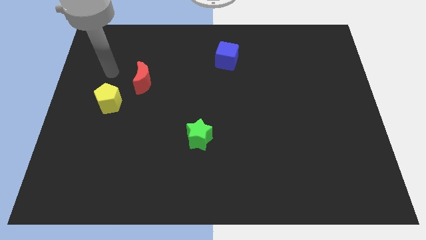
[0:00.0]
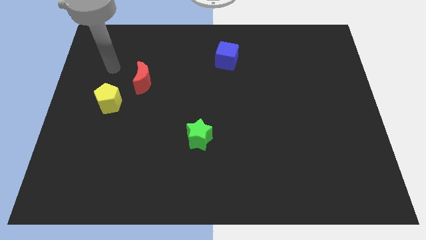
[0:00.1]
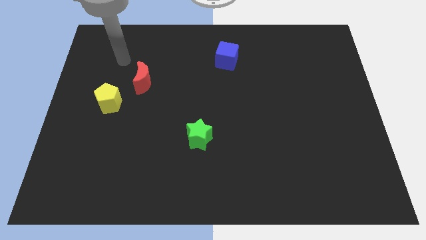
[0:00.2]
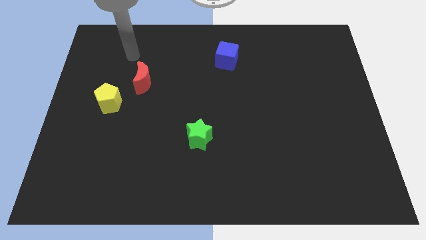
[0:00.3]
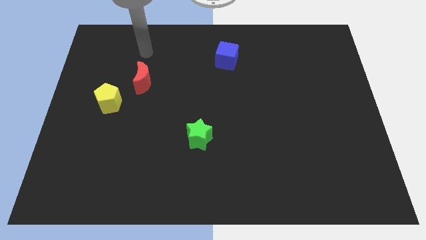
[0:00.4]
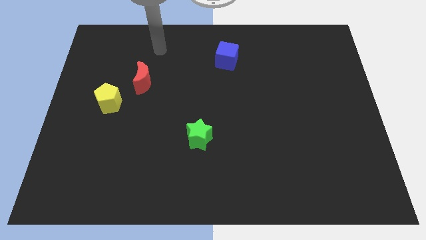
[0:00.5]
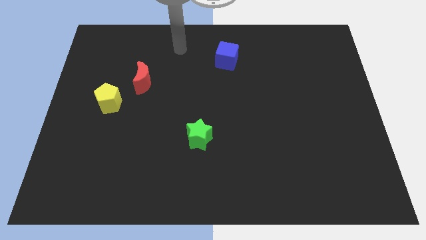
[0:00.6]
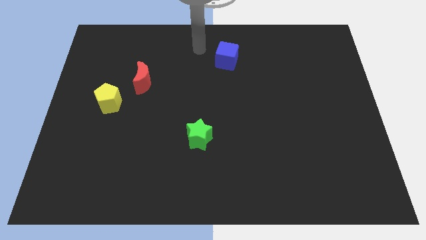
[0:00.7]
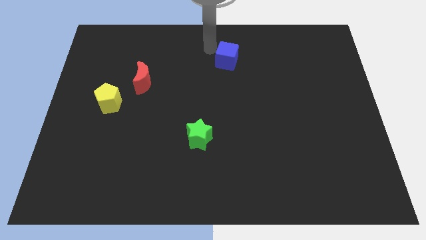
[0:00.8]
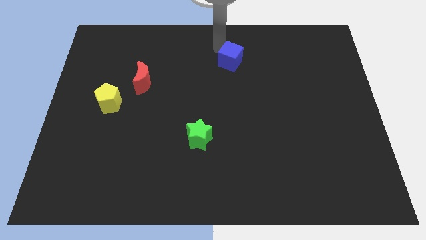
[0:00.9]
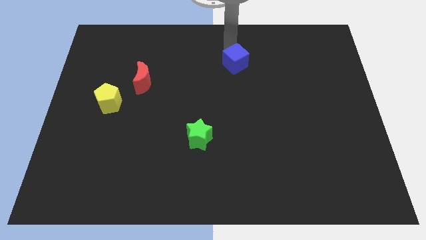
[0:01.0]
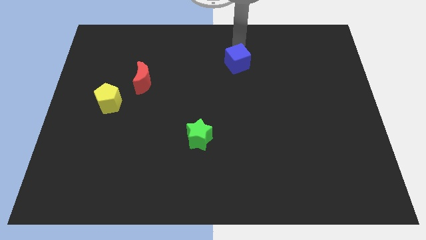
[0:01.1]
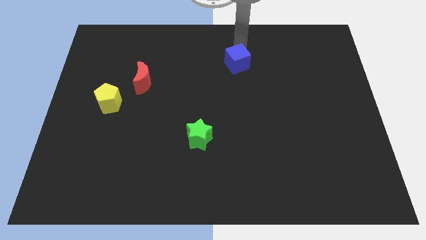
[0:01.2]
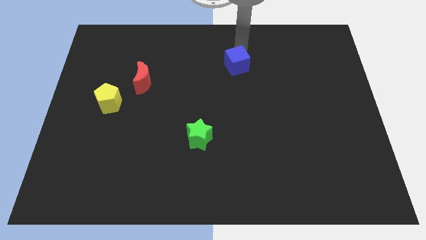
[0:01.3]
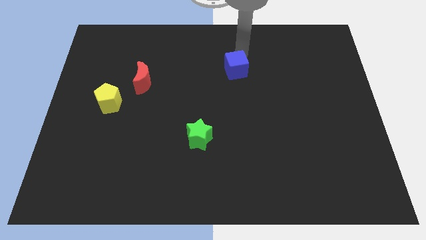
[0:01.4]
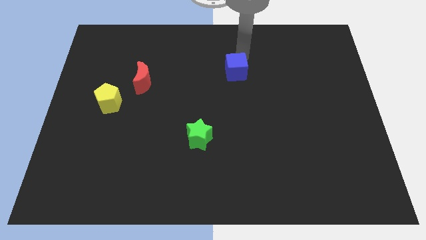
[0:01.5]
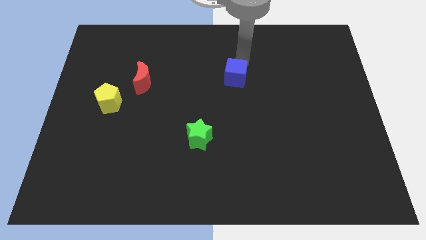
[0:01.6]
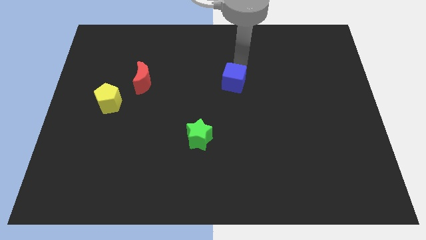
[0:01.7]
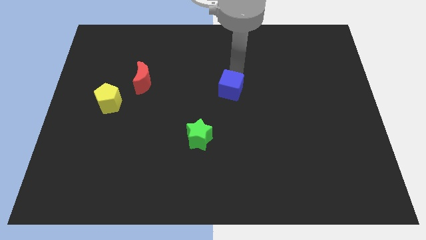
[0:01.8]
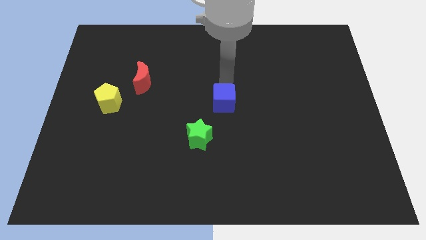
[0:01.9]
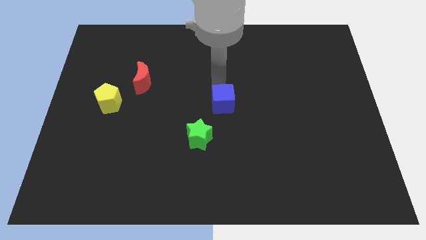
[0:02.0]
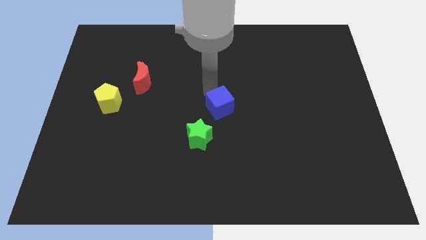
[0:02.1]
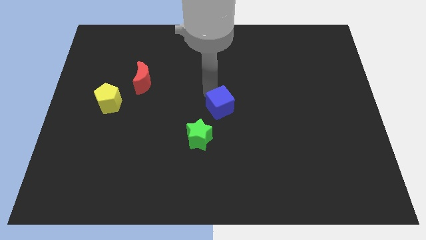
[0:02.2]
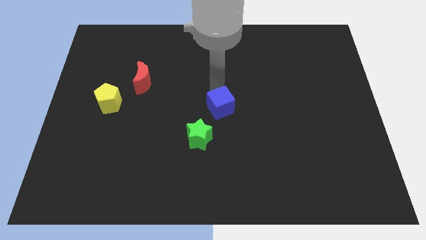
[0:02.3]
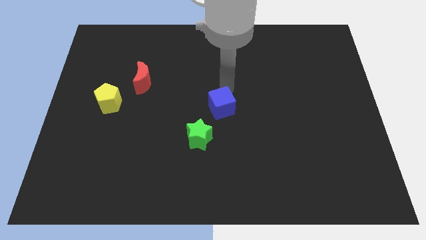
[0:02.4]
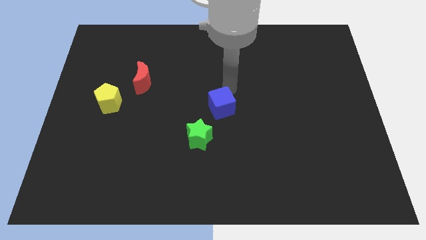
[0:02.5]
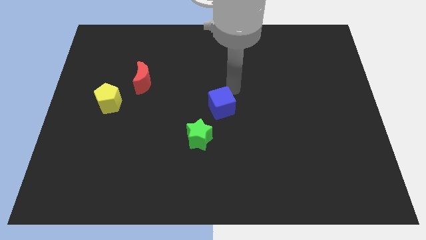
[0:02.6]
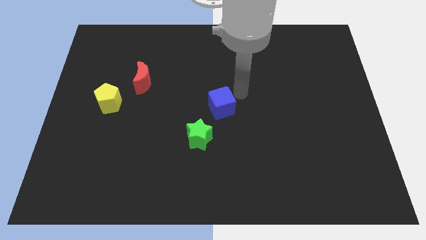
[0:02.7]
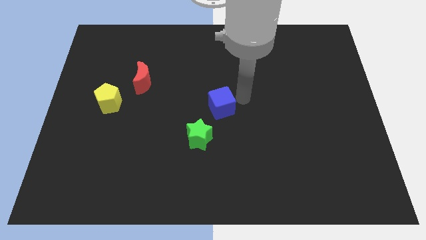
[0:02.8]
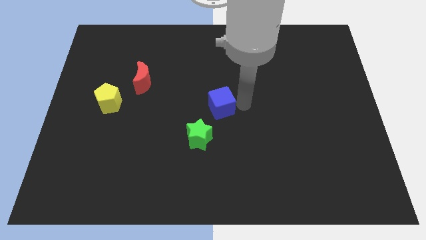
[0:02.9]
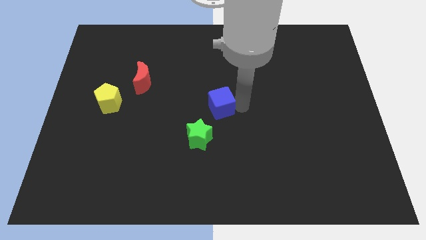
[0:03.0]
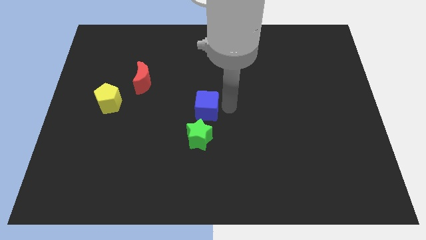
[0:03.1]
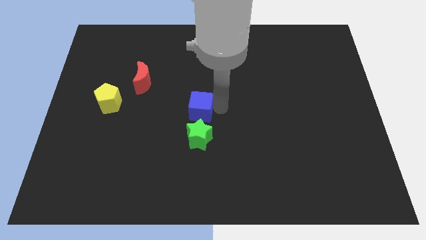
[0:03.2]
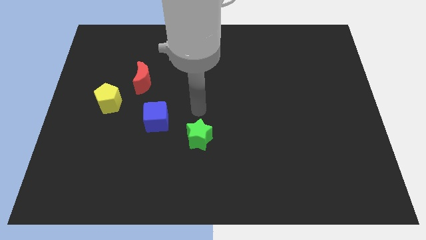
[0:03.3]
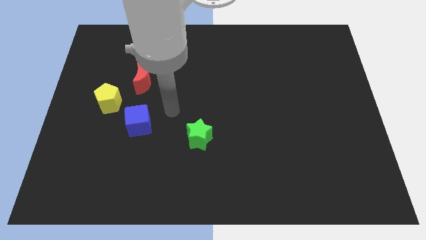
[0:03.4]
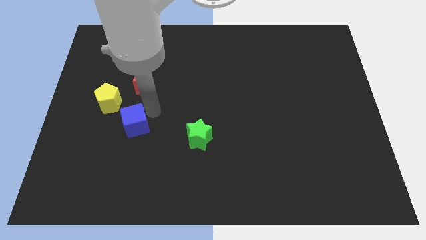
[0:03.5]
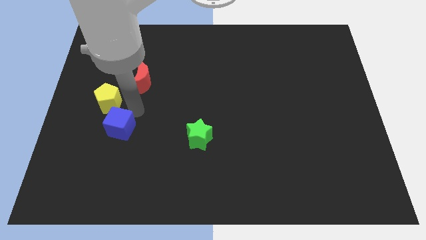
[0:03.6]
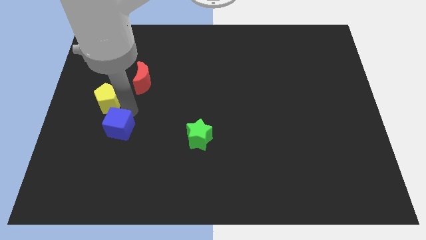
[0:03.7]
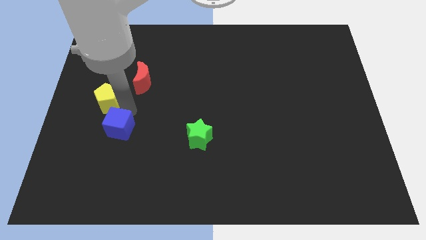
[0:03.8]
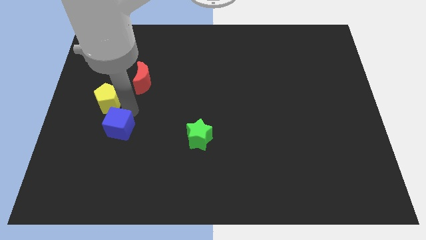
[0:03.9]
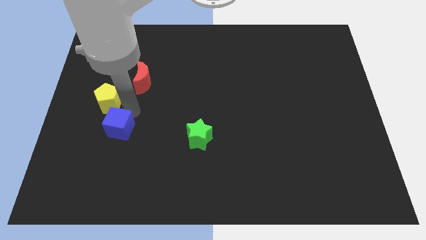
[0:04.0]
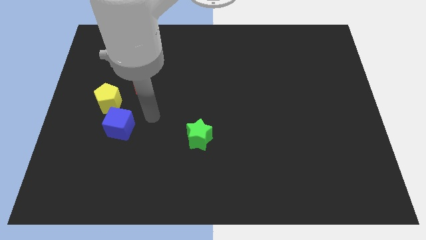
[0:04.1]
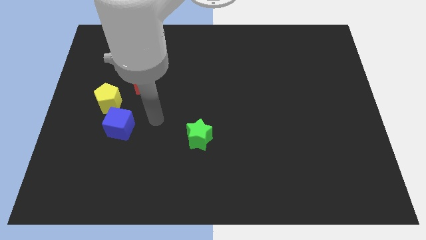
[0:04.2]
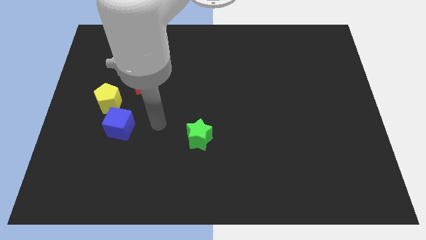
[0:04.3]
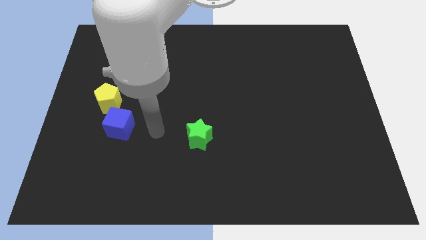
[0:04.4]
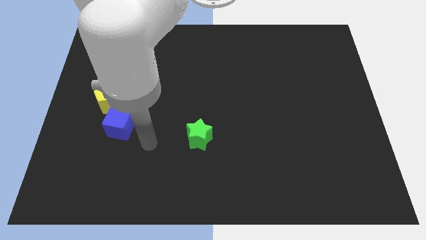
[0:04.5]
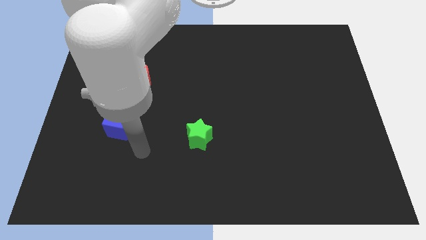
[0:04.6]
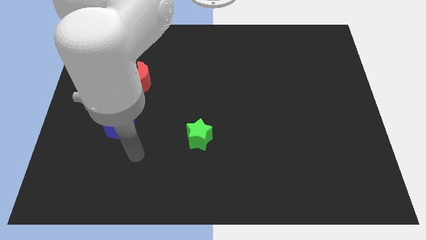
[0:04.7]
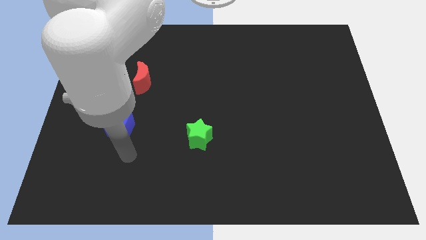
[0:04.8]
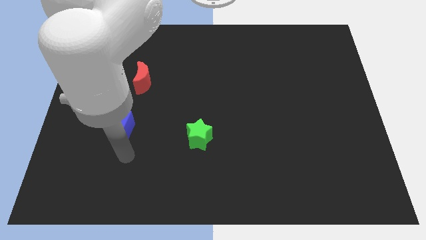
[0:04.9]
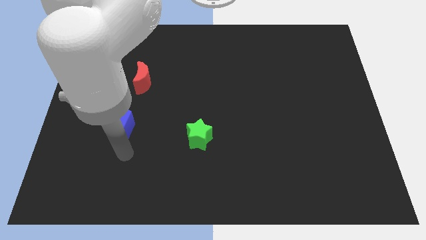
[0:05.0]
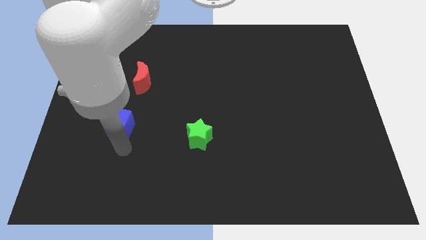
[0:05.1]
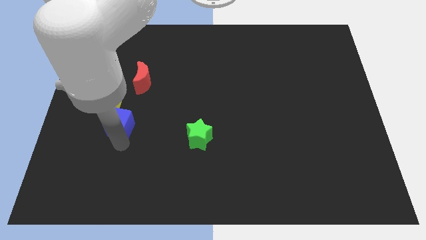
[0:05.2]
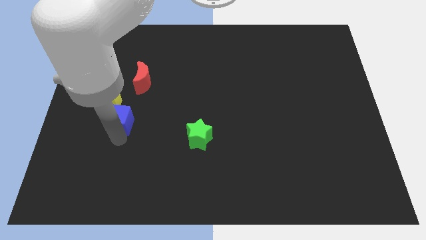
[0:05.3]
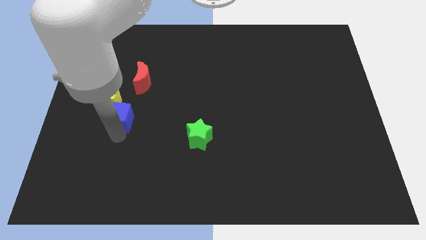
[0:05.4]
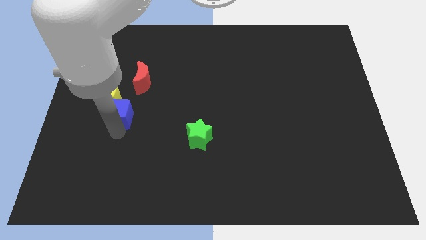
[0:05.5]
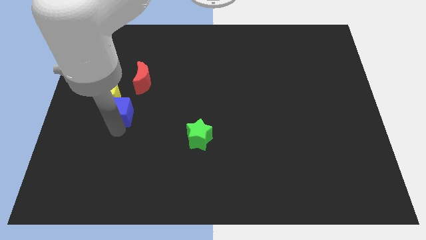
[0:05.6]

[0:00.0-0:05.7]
push the cube towards the yellow pentagon

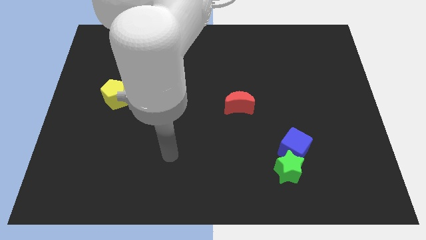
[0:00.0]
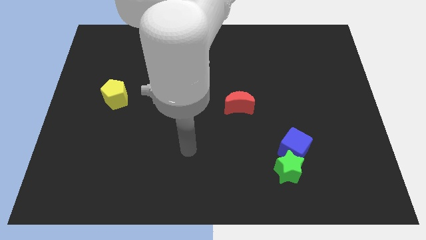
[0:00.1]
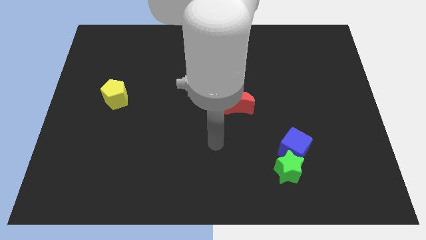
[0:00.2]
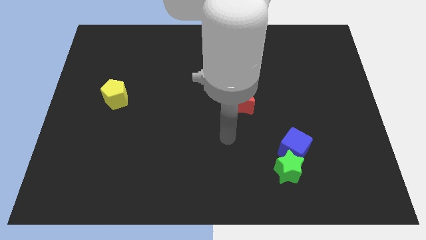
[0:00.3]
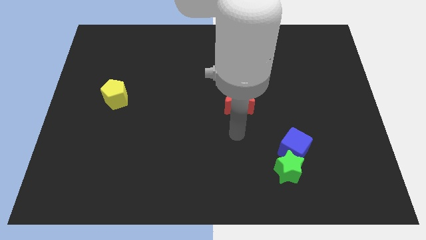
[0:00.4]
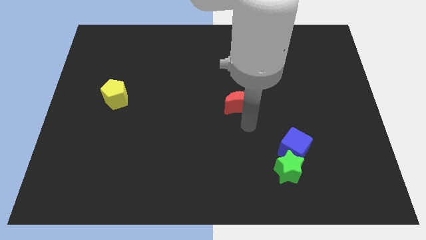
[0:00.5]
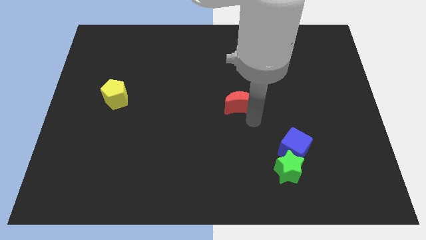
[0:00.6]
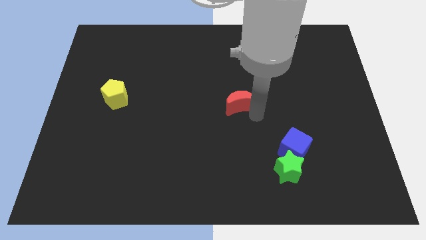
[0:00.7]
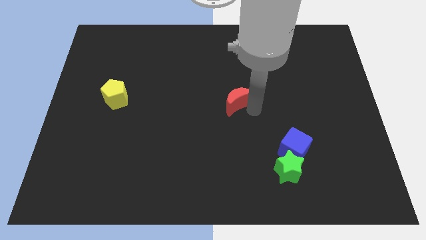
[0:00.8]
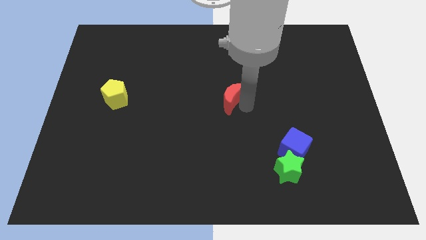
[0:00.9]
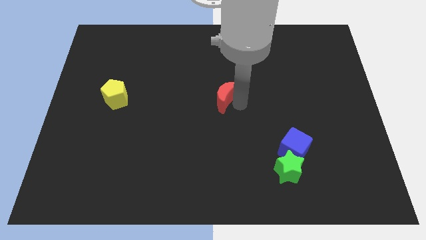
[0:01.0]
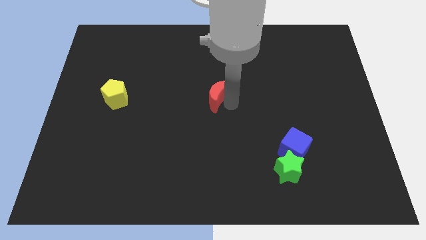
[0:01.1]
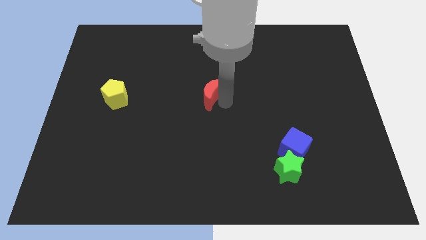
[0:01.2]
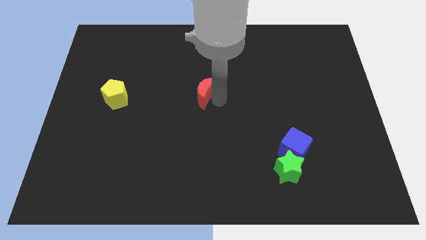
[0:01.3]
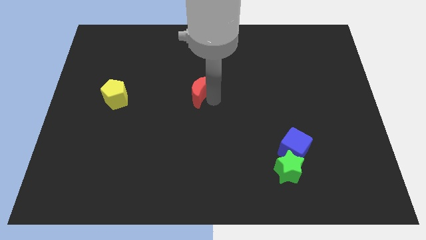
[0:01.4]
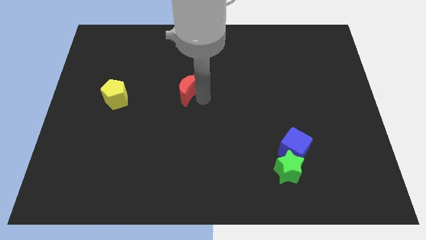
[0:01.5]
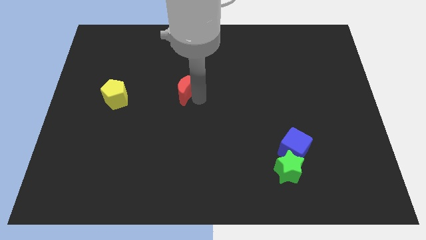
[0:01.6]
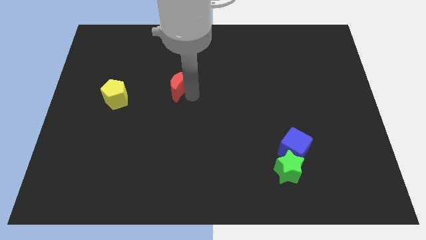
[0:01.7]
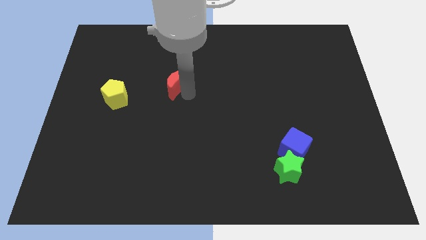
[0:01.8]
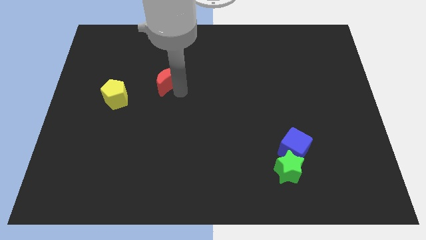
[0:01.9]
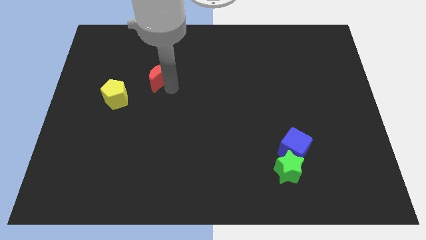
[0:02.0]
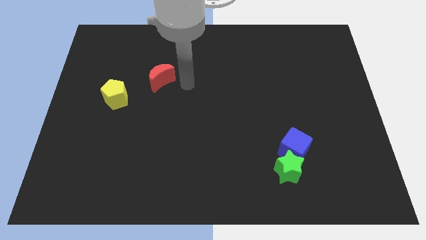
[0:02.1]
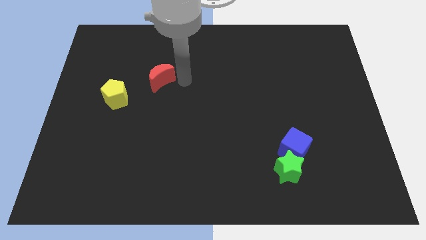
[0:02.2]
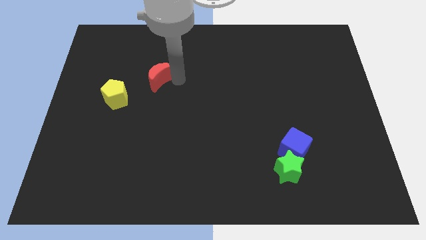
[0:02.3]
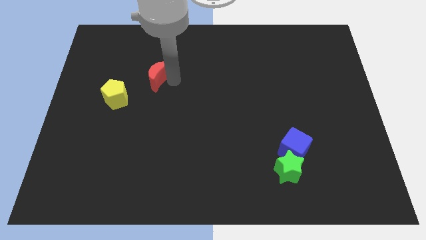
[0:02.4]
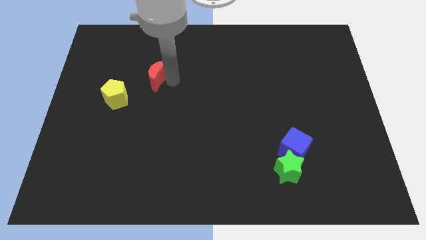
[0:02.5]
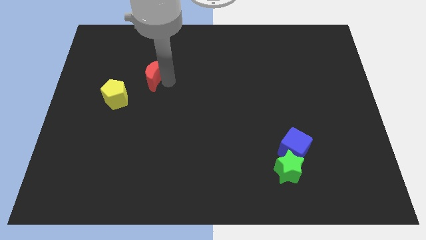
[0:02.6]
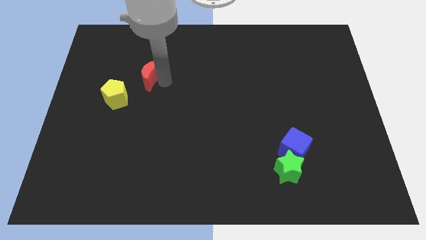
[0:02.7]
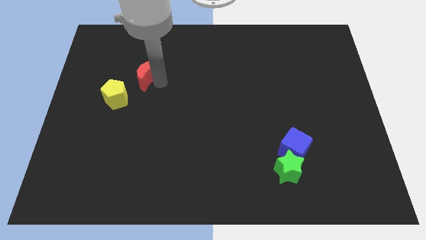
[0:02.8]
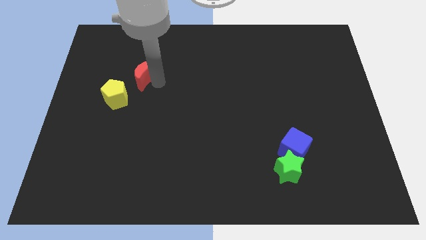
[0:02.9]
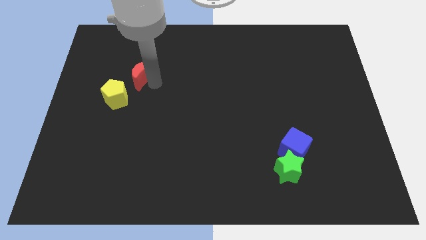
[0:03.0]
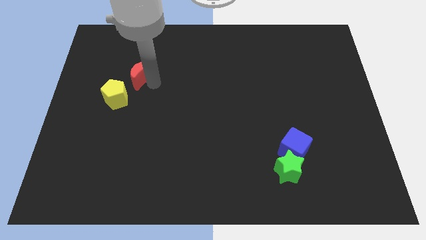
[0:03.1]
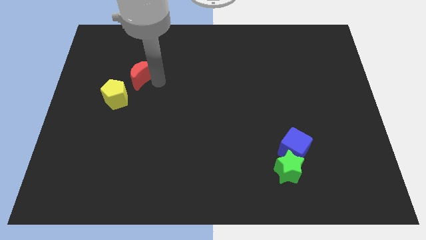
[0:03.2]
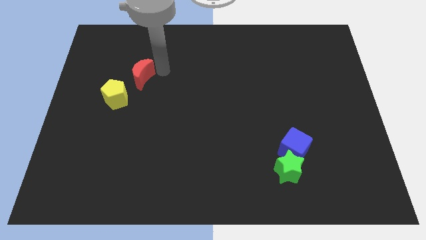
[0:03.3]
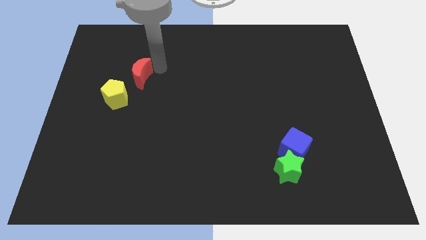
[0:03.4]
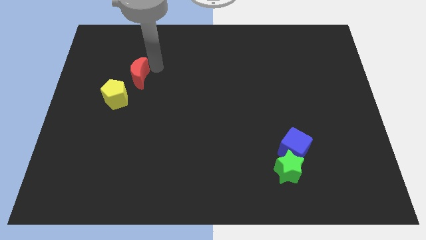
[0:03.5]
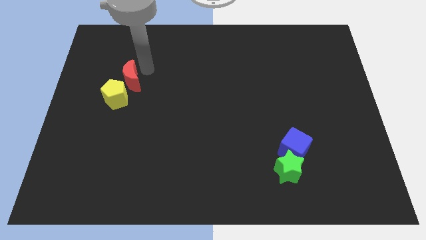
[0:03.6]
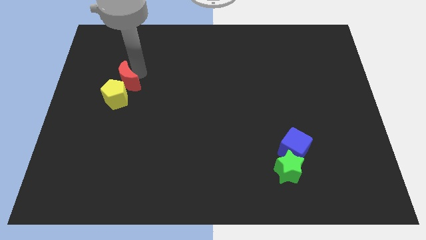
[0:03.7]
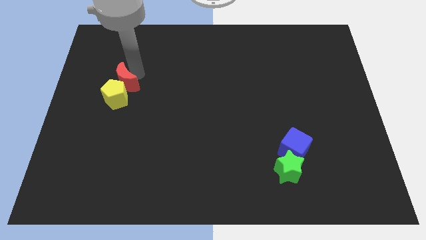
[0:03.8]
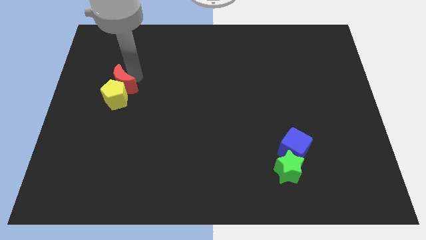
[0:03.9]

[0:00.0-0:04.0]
move the moon to the pentagon
